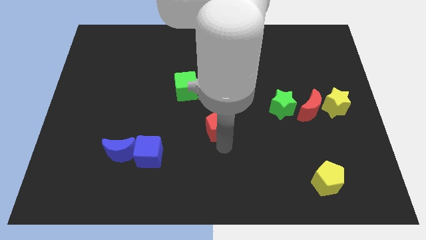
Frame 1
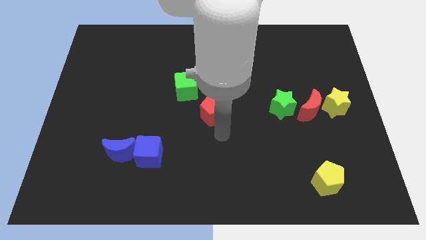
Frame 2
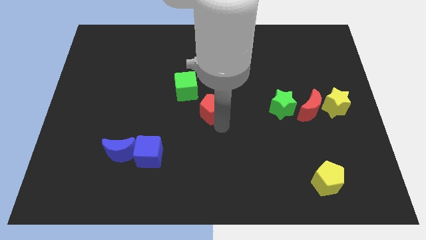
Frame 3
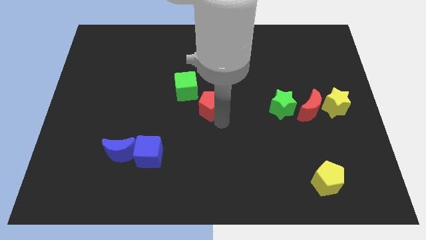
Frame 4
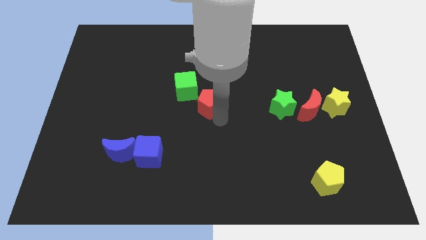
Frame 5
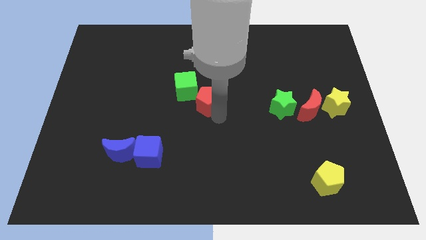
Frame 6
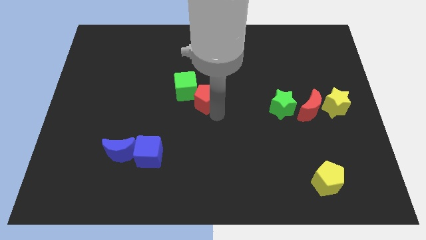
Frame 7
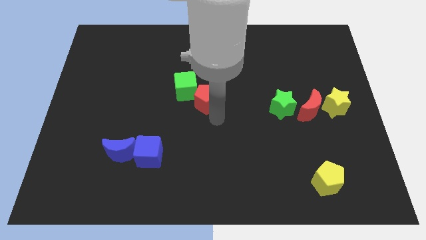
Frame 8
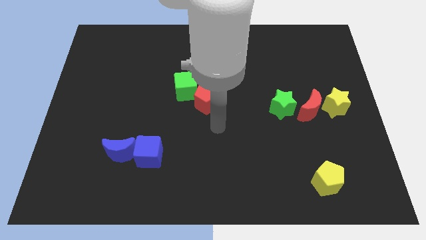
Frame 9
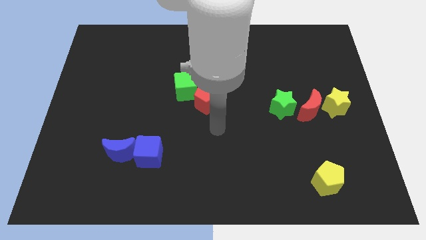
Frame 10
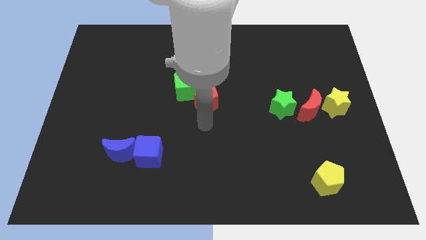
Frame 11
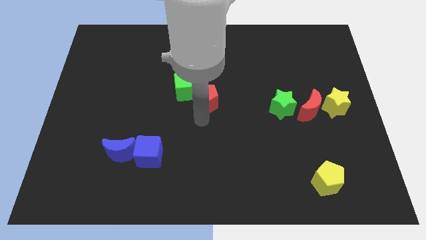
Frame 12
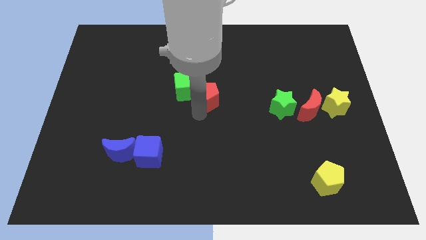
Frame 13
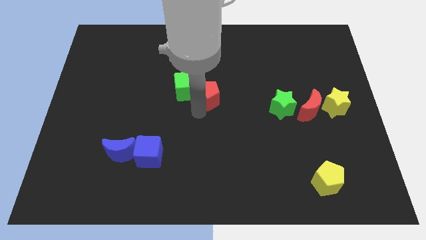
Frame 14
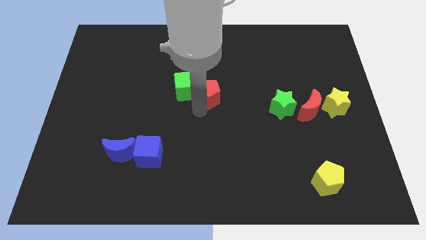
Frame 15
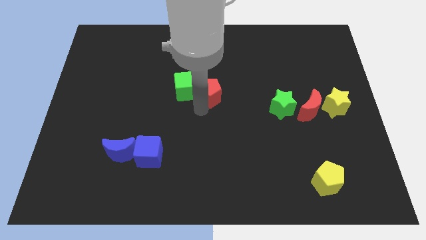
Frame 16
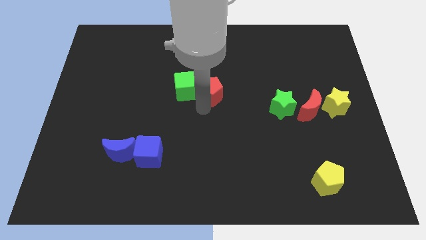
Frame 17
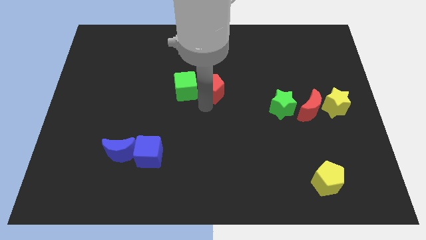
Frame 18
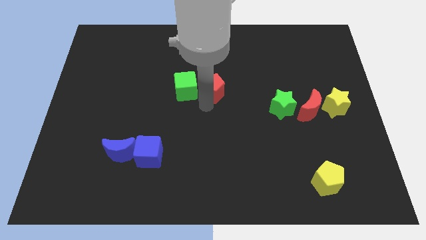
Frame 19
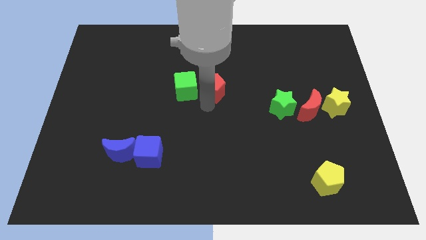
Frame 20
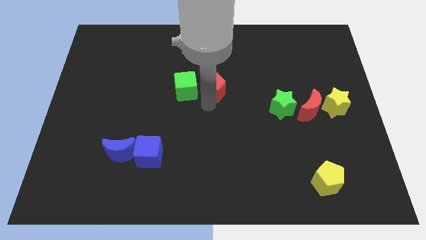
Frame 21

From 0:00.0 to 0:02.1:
place the red pentagon at the right side of the green cube

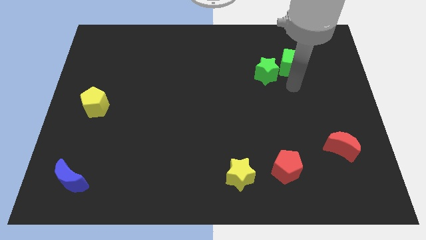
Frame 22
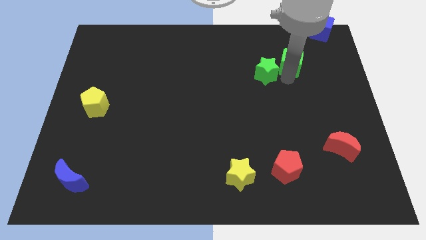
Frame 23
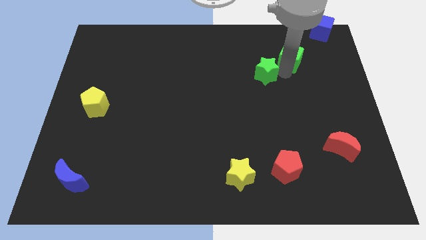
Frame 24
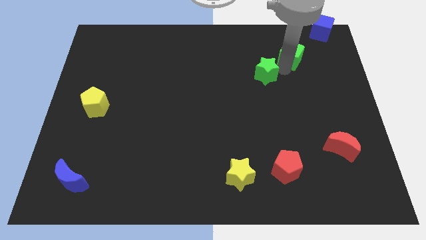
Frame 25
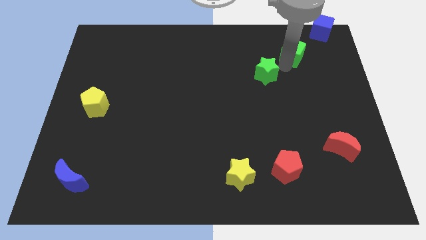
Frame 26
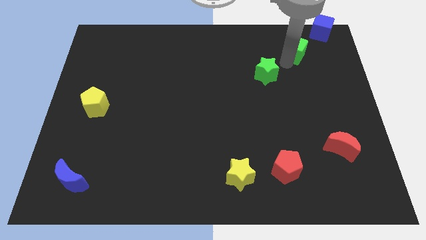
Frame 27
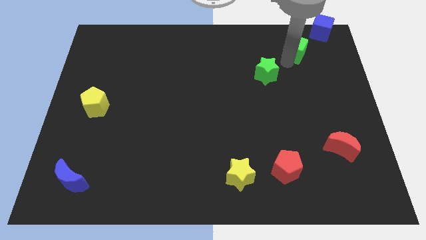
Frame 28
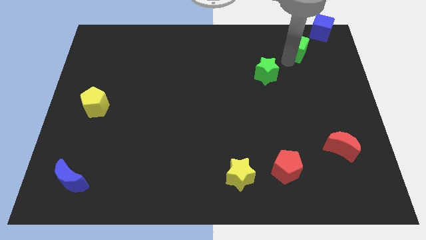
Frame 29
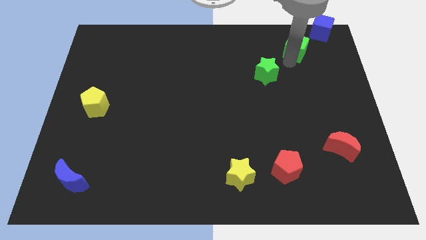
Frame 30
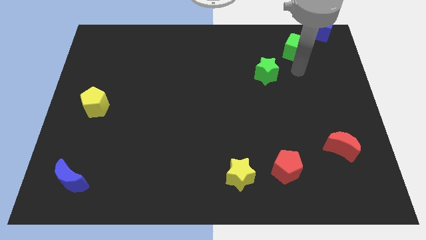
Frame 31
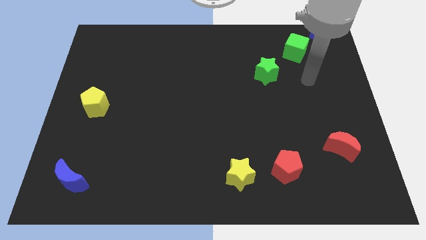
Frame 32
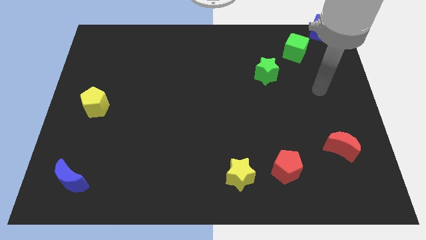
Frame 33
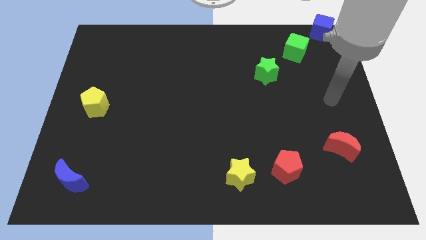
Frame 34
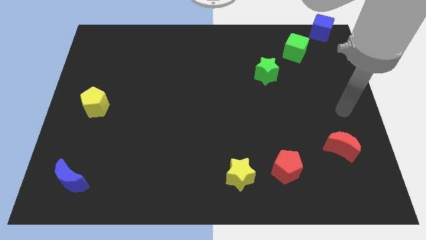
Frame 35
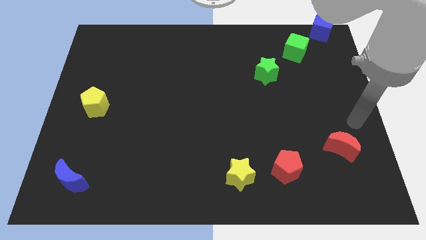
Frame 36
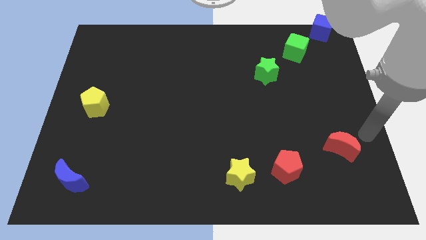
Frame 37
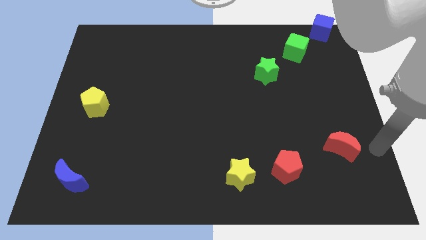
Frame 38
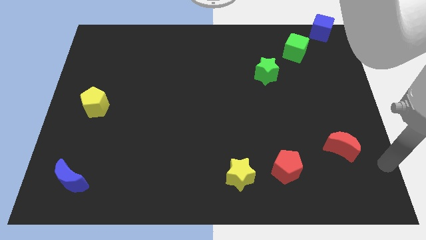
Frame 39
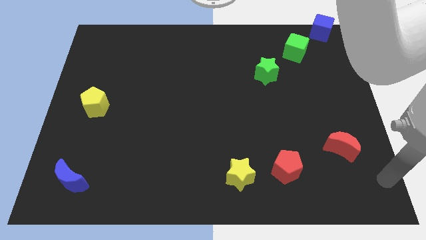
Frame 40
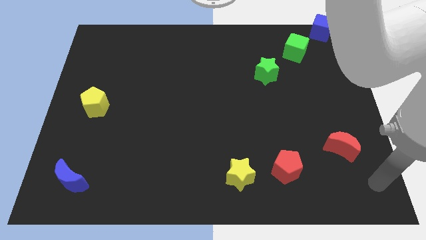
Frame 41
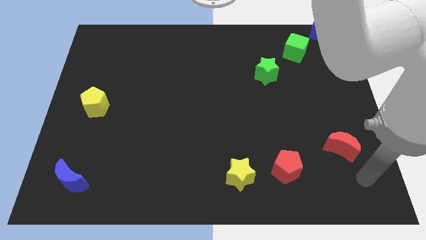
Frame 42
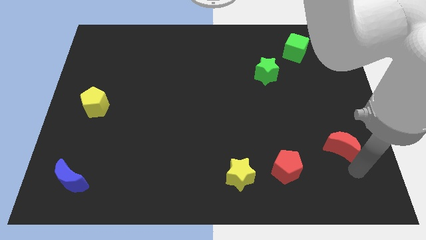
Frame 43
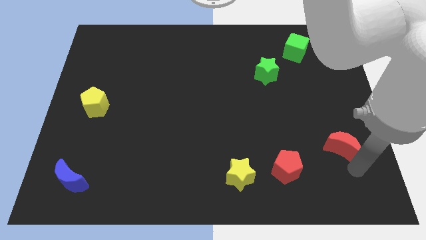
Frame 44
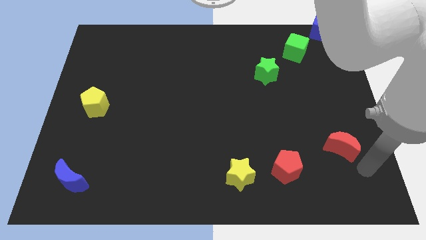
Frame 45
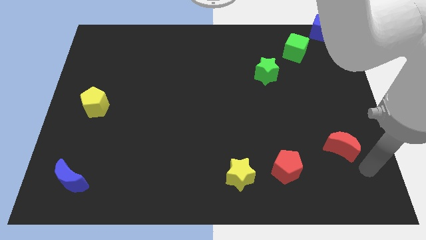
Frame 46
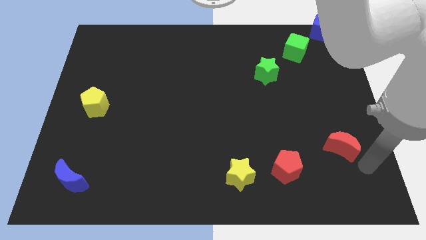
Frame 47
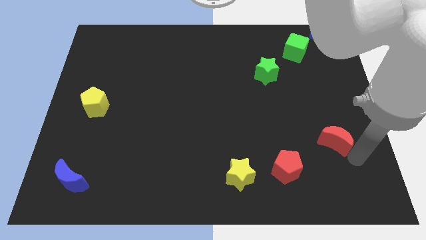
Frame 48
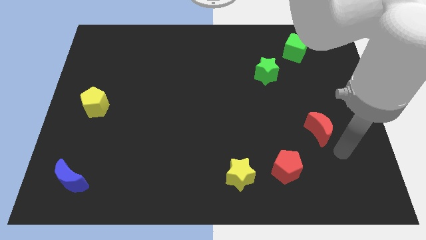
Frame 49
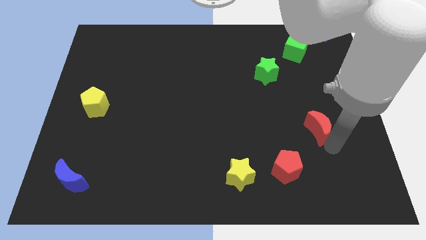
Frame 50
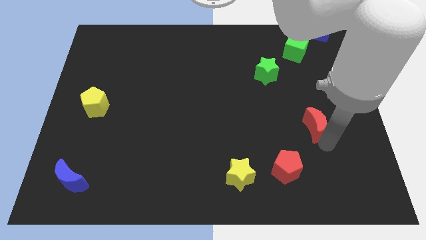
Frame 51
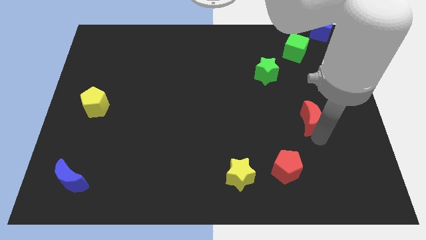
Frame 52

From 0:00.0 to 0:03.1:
move the green cube towards blue cube

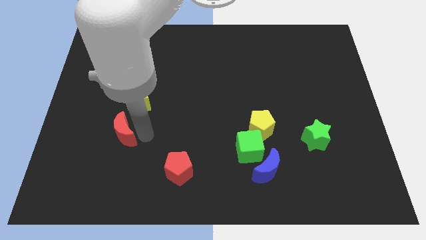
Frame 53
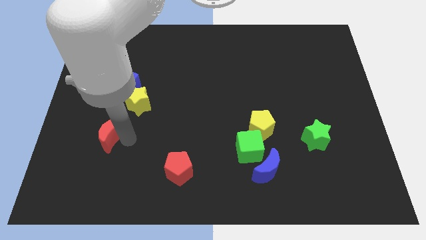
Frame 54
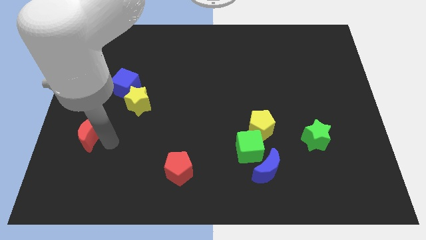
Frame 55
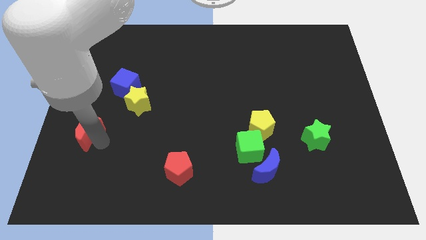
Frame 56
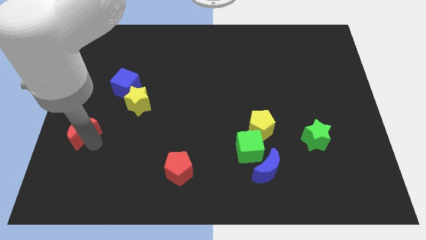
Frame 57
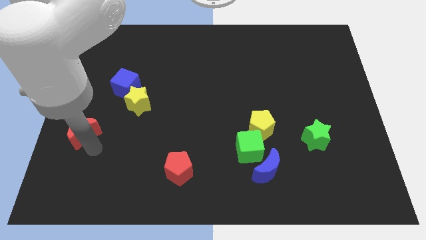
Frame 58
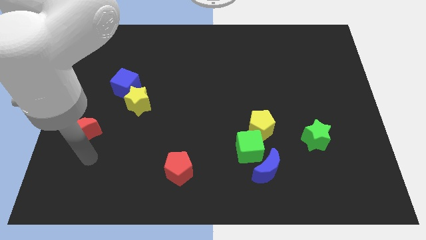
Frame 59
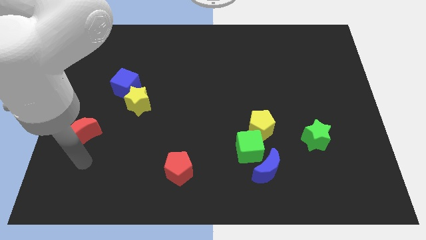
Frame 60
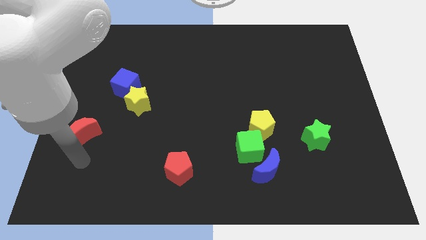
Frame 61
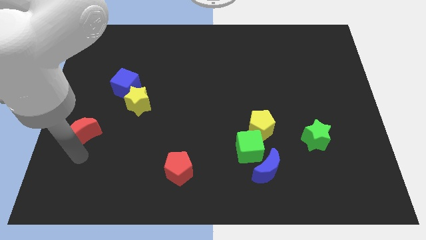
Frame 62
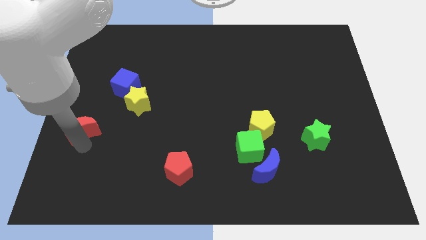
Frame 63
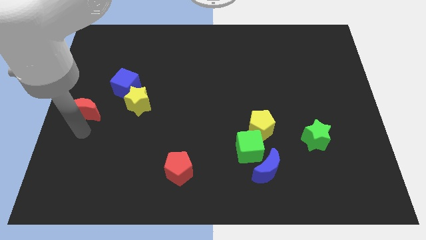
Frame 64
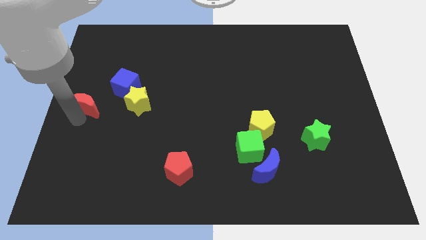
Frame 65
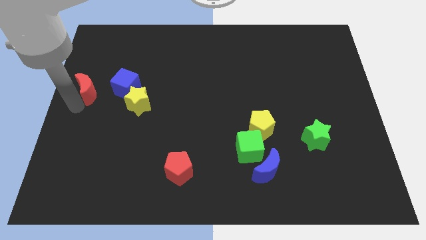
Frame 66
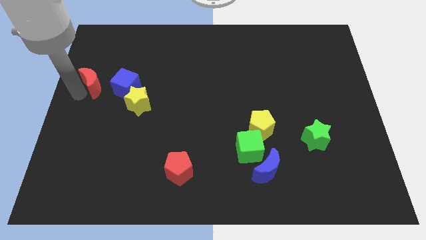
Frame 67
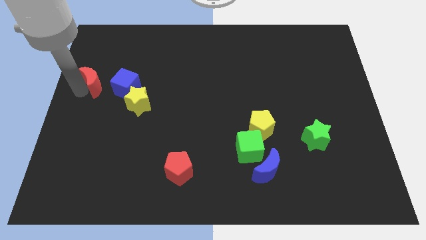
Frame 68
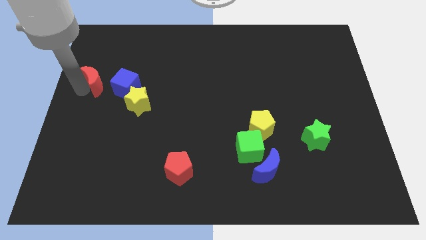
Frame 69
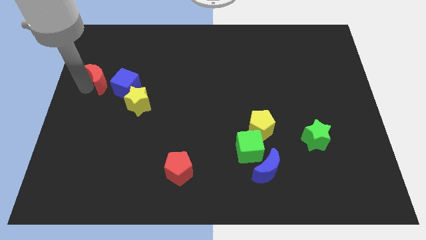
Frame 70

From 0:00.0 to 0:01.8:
place the red moon to the left of blue cube

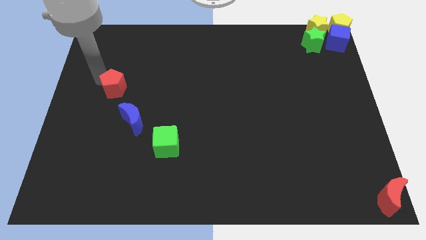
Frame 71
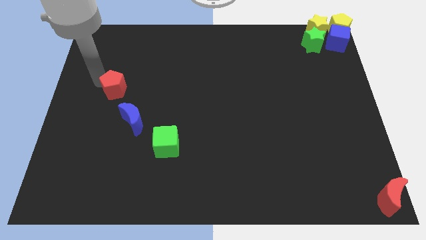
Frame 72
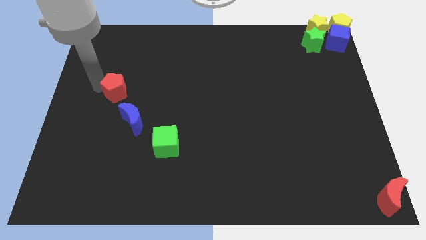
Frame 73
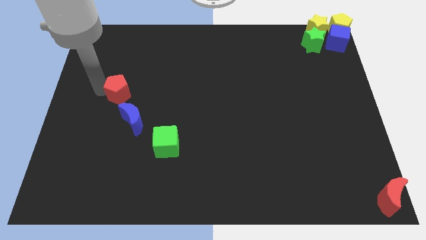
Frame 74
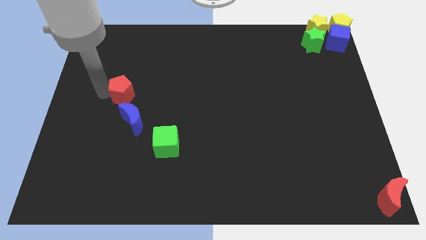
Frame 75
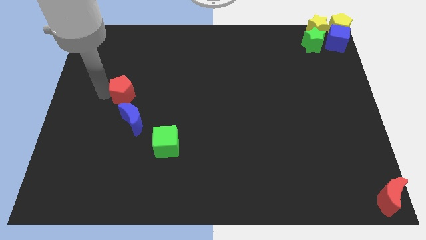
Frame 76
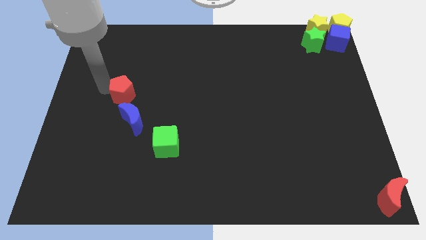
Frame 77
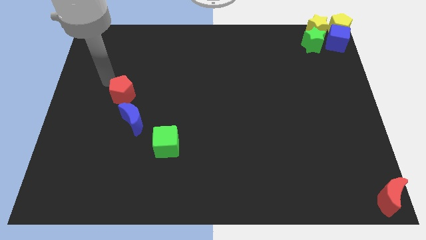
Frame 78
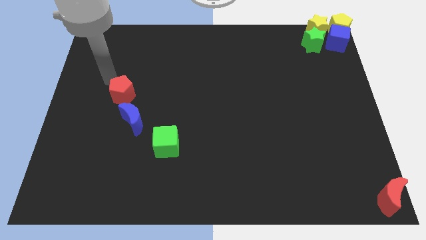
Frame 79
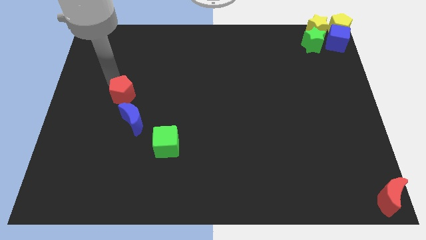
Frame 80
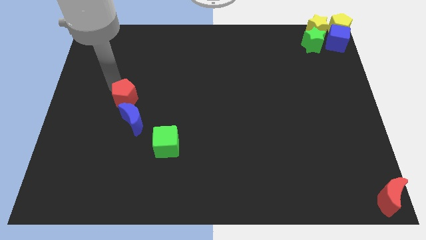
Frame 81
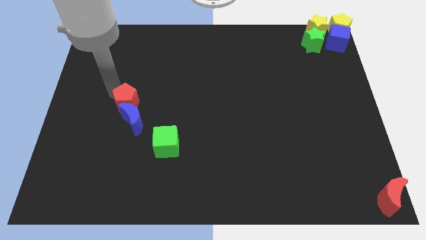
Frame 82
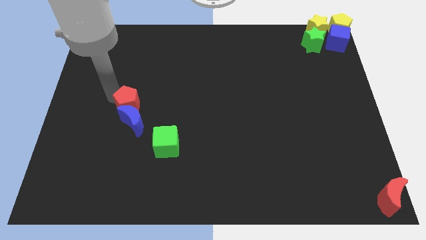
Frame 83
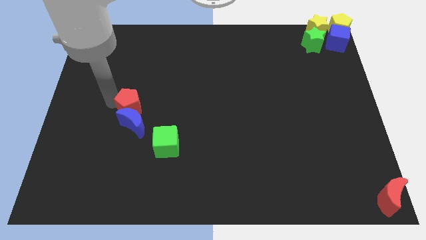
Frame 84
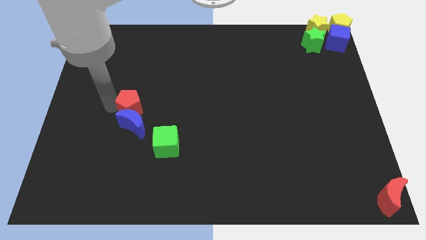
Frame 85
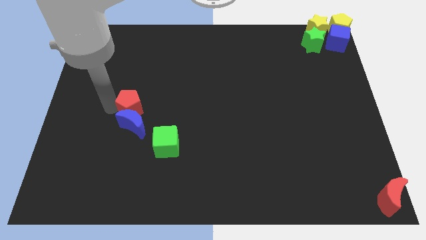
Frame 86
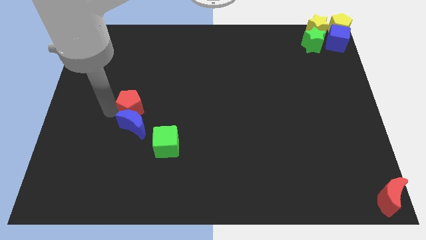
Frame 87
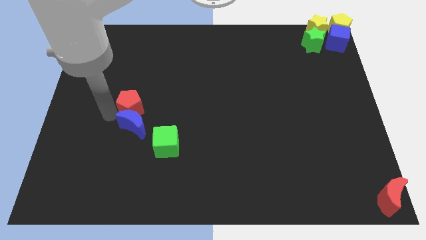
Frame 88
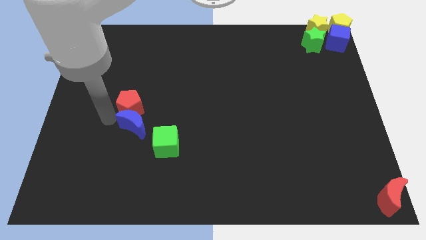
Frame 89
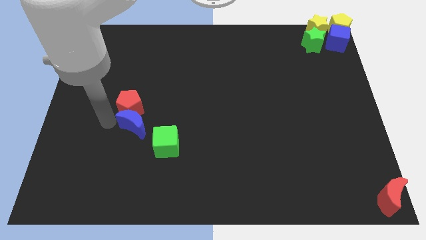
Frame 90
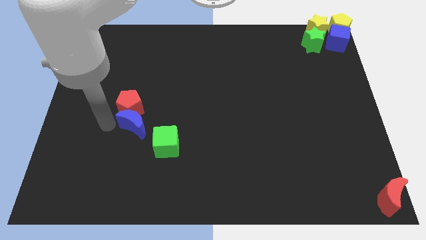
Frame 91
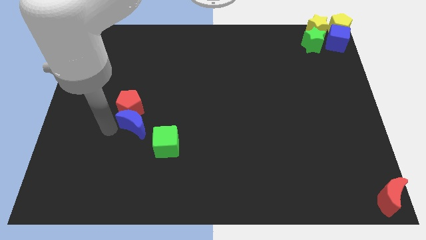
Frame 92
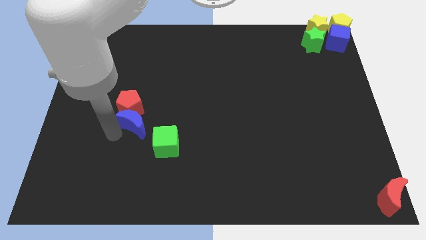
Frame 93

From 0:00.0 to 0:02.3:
push the red pentagon into the blue moon
